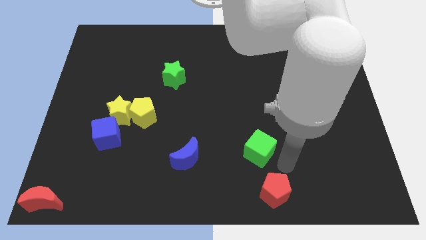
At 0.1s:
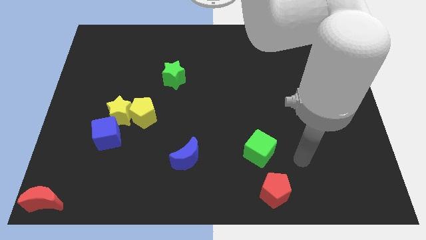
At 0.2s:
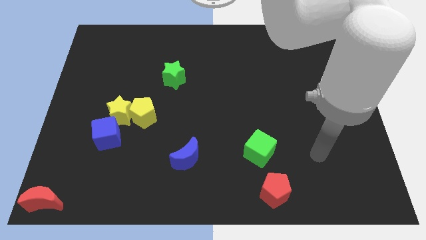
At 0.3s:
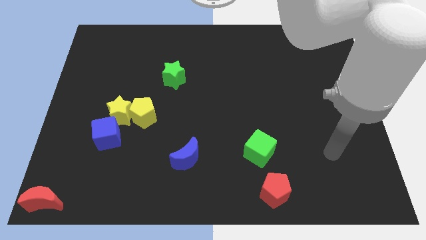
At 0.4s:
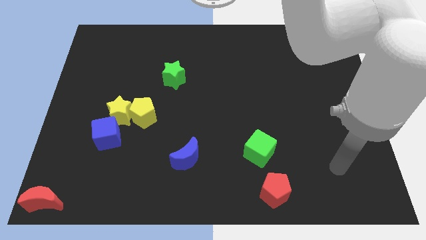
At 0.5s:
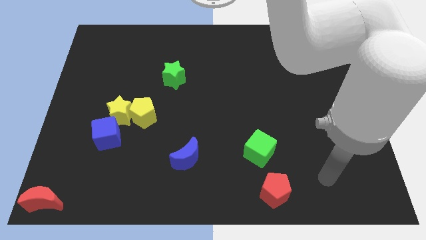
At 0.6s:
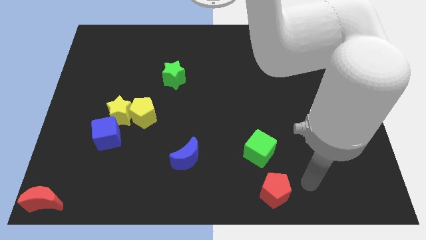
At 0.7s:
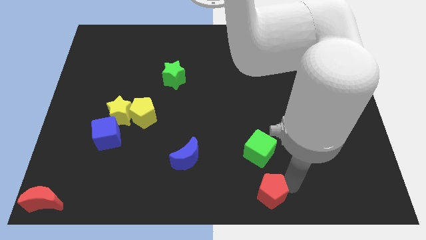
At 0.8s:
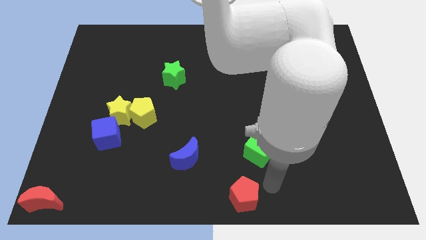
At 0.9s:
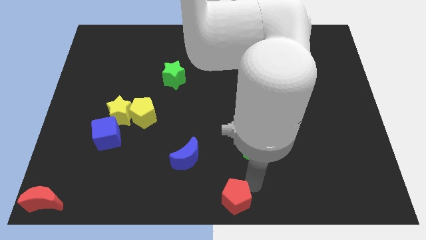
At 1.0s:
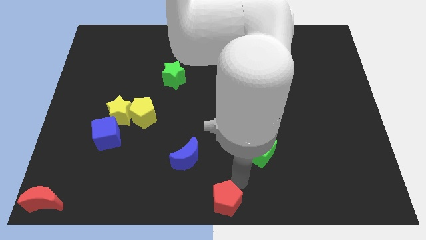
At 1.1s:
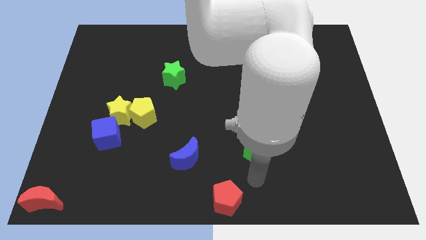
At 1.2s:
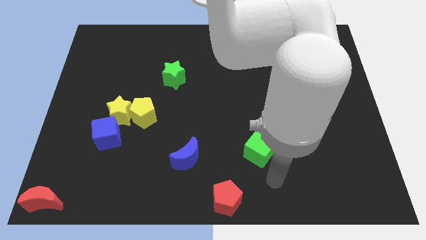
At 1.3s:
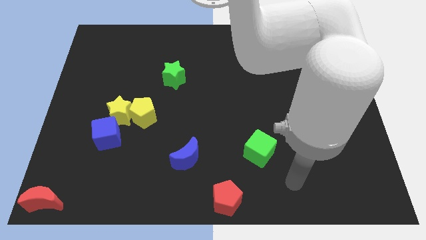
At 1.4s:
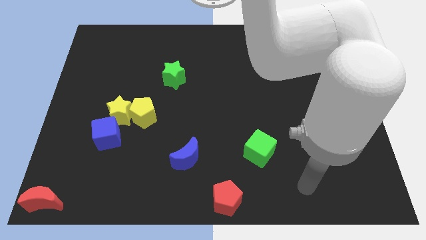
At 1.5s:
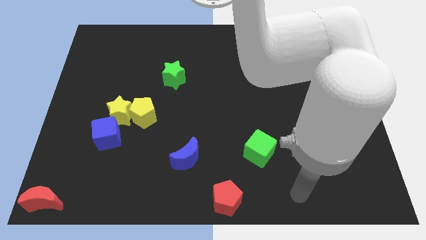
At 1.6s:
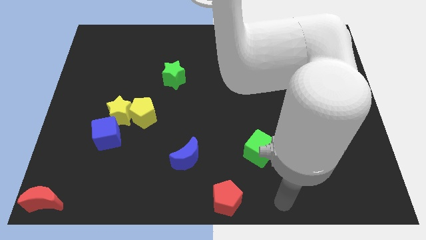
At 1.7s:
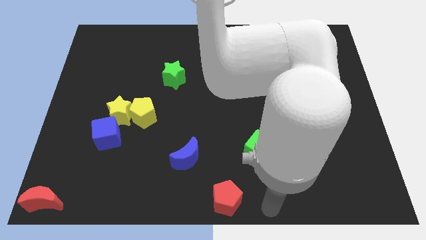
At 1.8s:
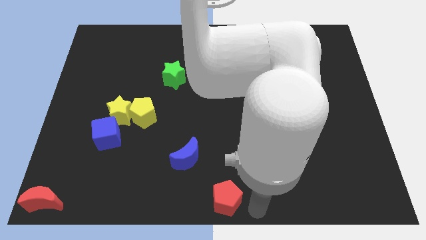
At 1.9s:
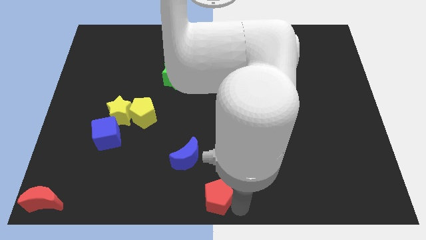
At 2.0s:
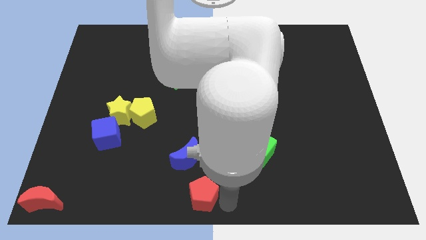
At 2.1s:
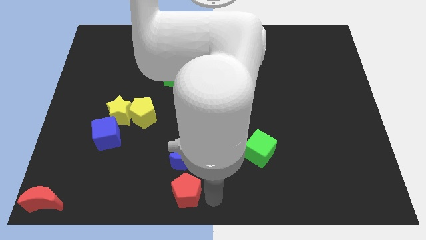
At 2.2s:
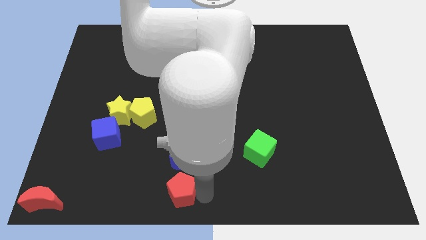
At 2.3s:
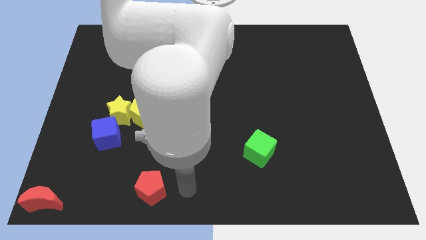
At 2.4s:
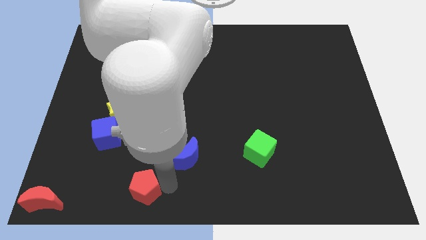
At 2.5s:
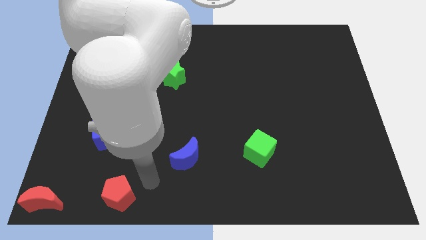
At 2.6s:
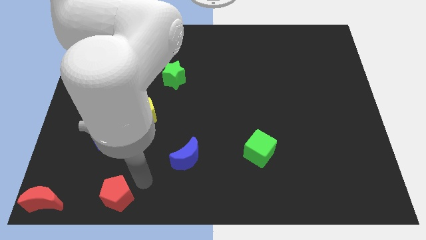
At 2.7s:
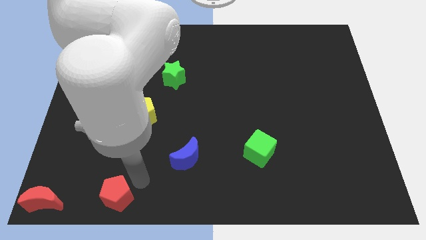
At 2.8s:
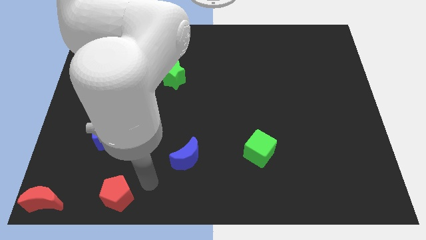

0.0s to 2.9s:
move the red pentagon to the left

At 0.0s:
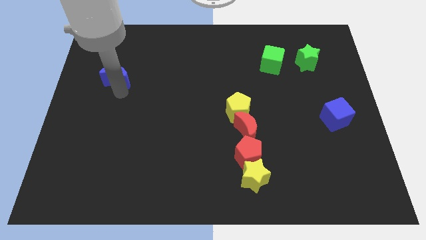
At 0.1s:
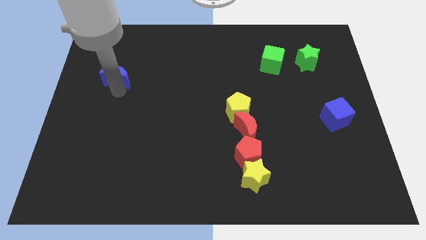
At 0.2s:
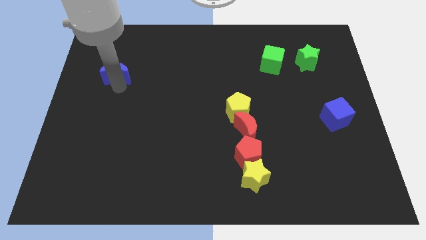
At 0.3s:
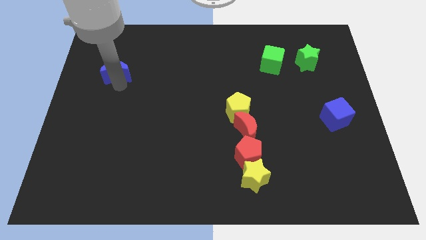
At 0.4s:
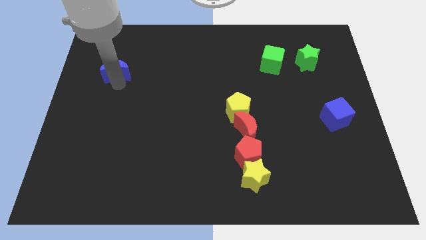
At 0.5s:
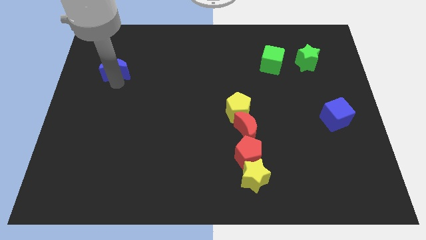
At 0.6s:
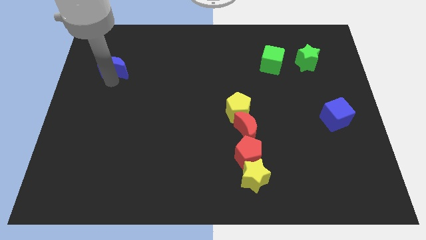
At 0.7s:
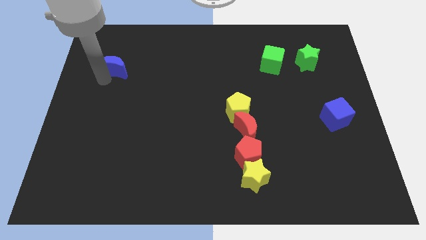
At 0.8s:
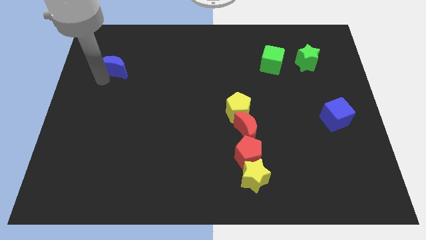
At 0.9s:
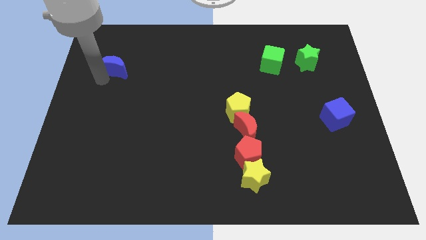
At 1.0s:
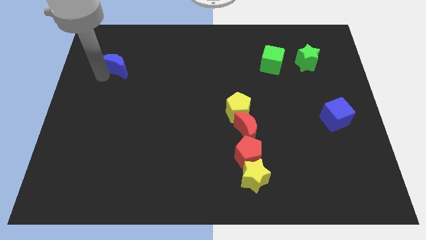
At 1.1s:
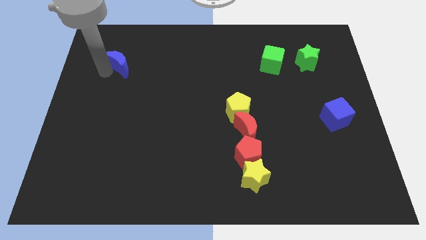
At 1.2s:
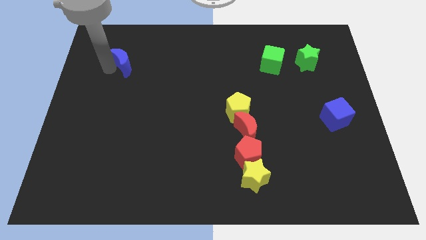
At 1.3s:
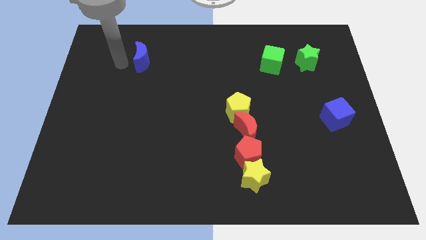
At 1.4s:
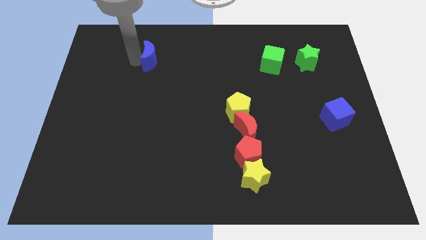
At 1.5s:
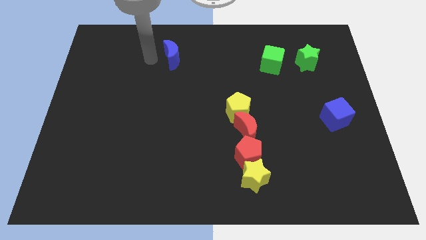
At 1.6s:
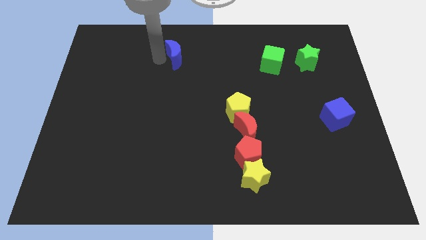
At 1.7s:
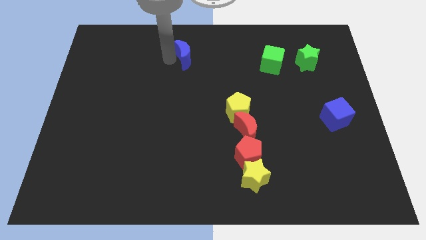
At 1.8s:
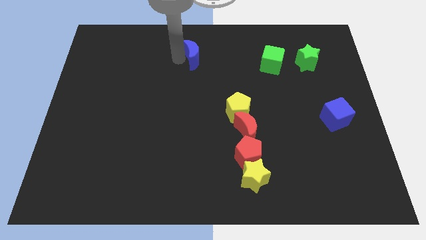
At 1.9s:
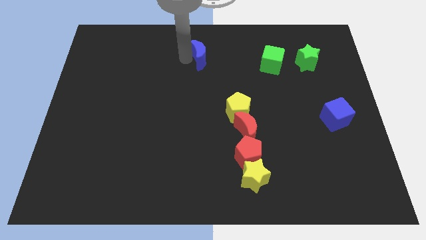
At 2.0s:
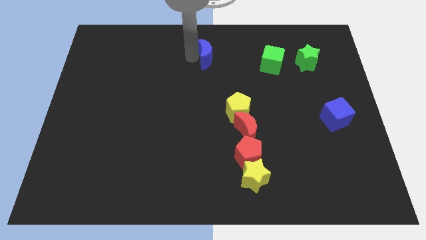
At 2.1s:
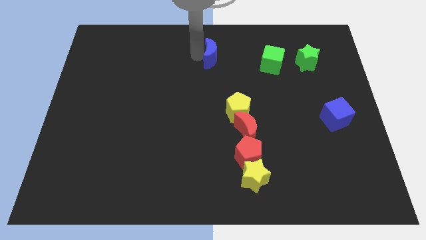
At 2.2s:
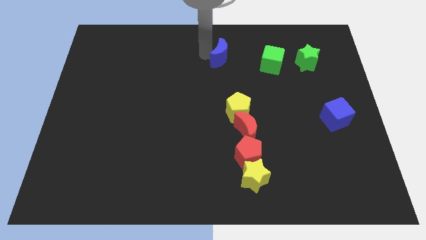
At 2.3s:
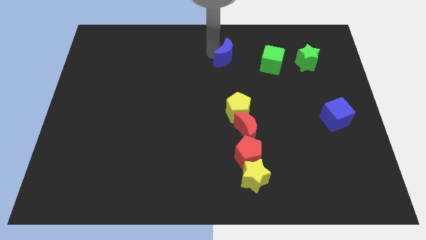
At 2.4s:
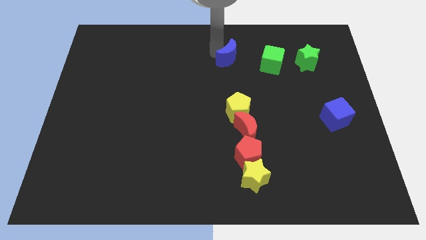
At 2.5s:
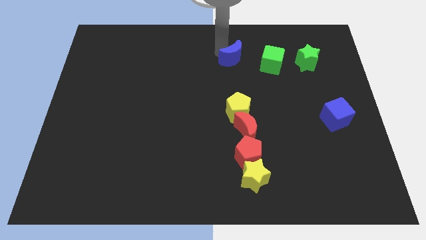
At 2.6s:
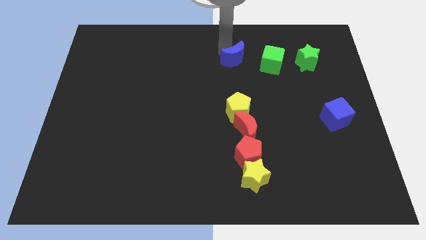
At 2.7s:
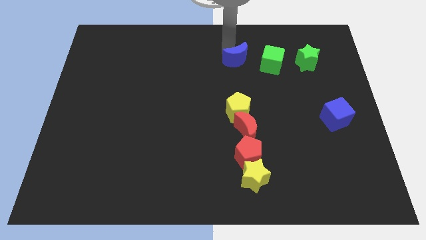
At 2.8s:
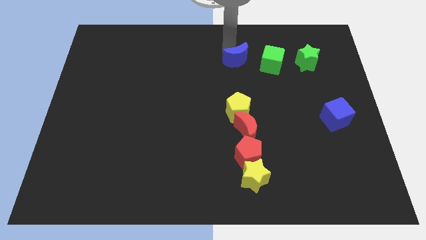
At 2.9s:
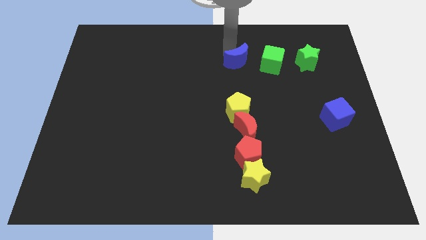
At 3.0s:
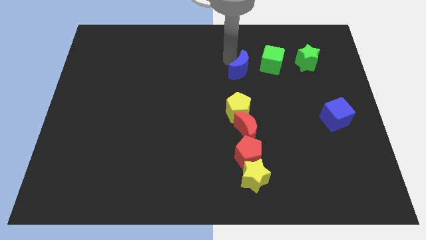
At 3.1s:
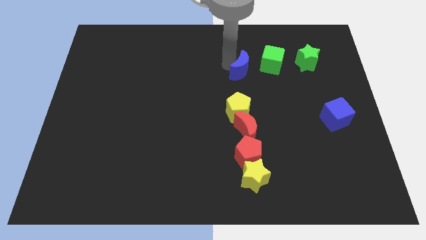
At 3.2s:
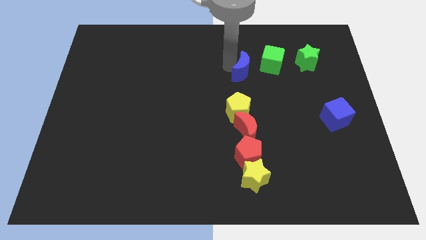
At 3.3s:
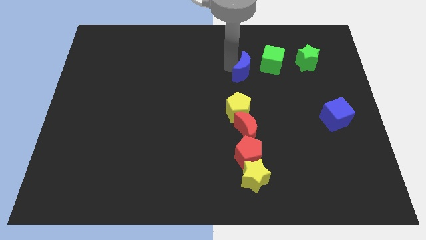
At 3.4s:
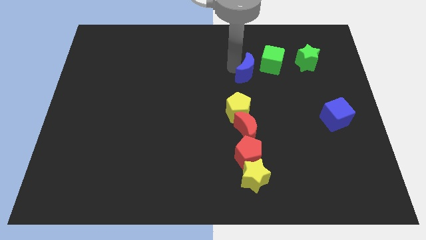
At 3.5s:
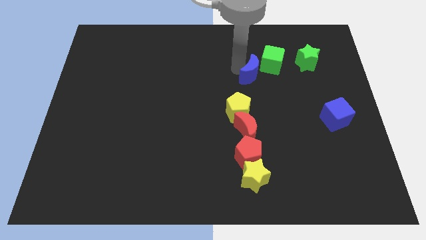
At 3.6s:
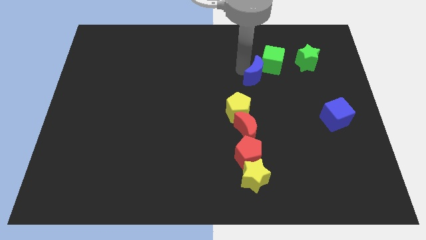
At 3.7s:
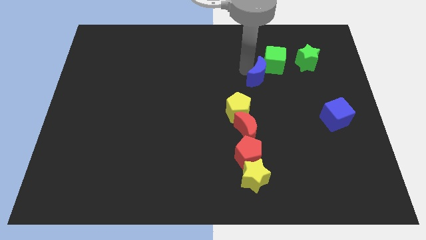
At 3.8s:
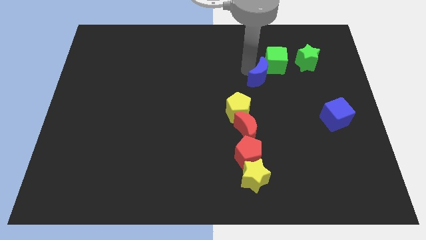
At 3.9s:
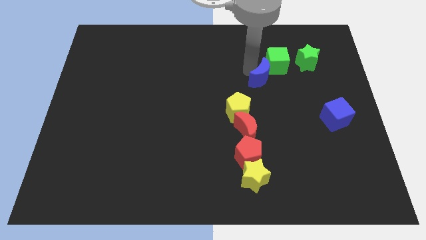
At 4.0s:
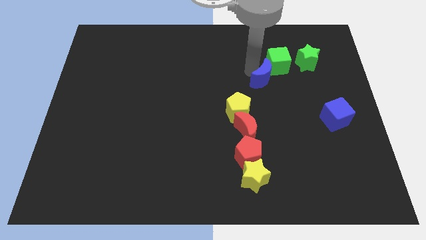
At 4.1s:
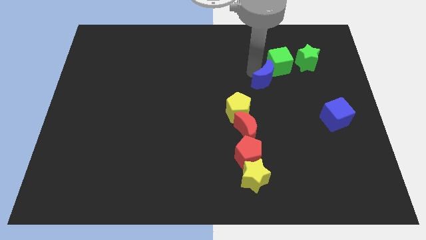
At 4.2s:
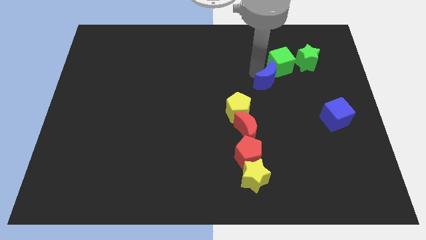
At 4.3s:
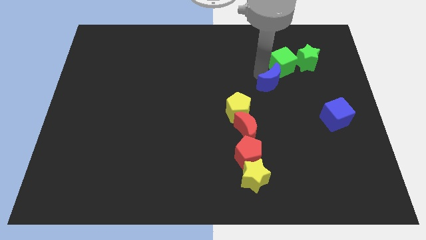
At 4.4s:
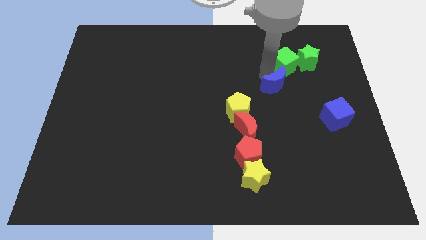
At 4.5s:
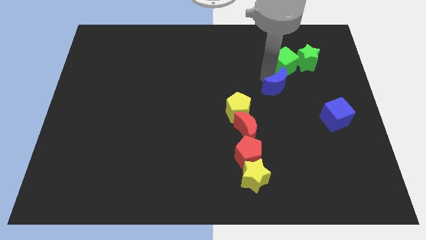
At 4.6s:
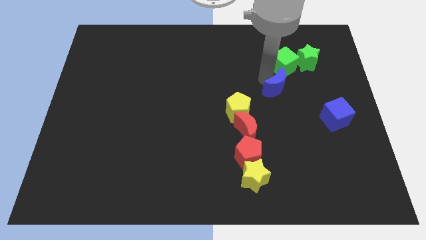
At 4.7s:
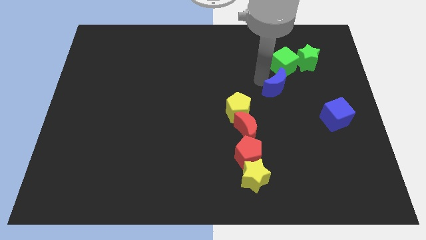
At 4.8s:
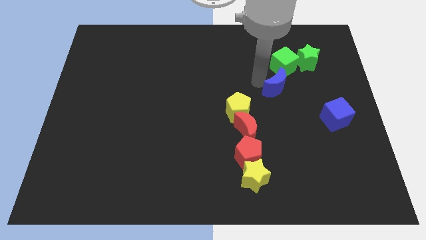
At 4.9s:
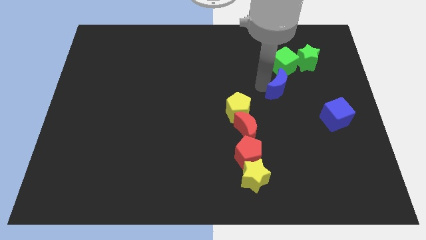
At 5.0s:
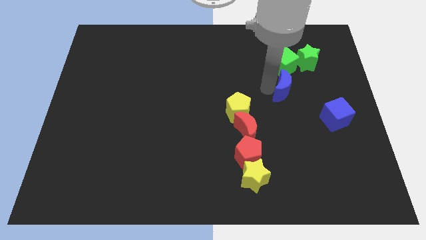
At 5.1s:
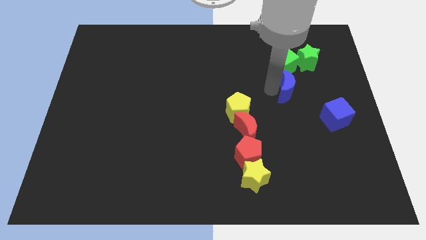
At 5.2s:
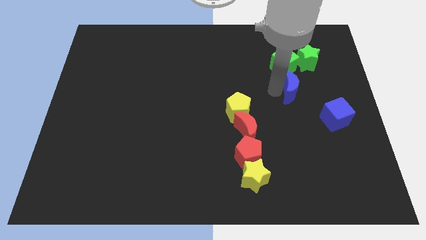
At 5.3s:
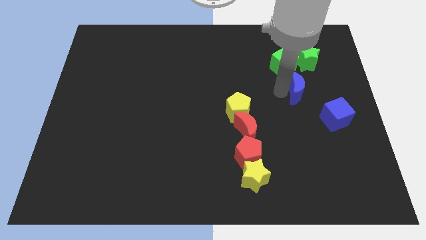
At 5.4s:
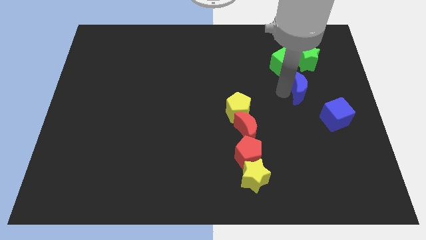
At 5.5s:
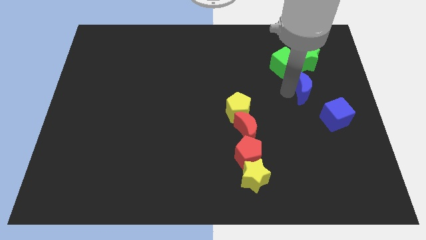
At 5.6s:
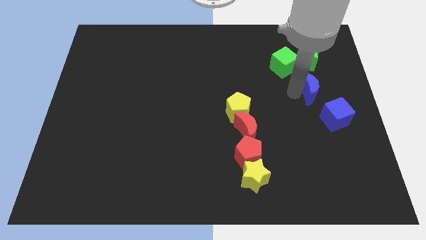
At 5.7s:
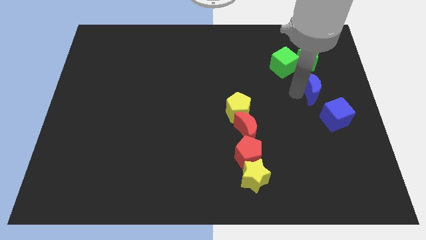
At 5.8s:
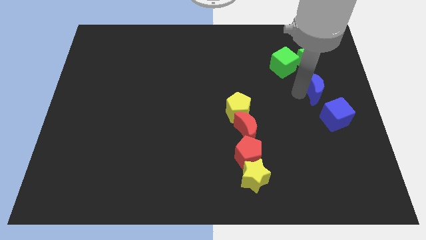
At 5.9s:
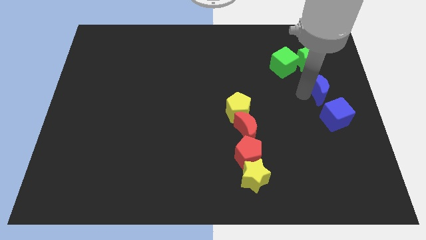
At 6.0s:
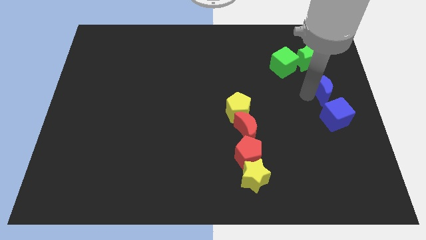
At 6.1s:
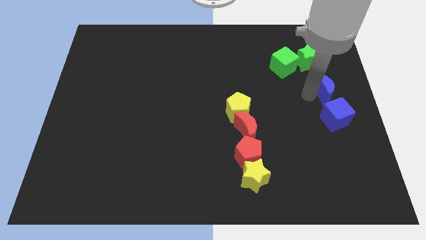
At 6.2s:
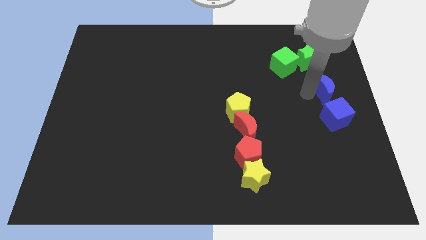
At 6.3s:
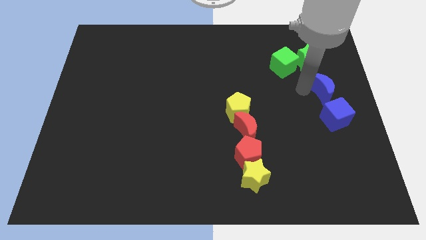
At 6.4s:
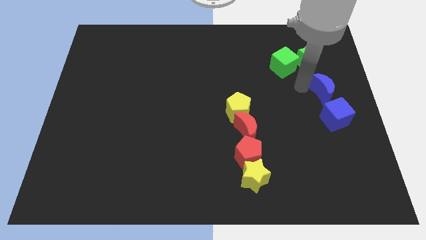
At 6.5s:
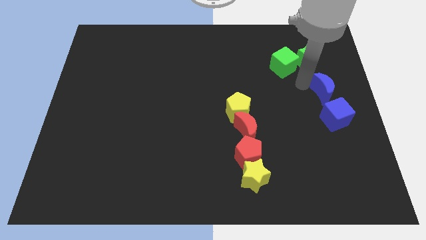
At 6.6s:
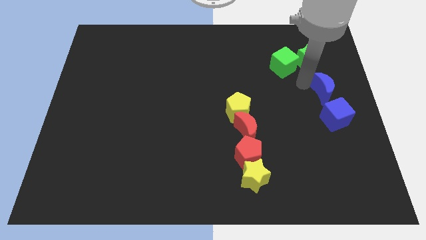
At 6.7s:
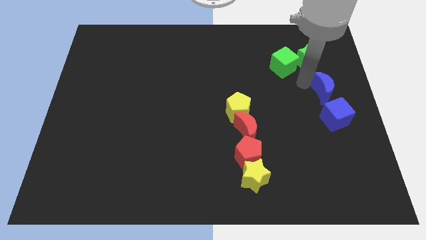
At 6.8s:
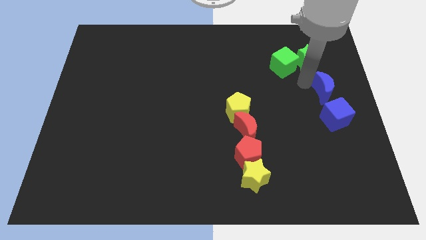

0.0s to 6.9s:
move the blue moon to the top side of the blue cube
